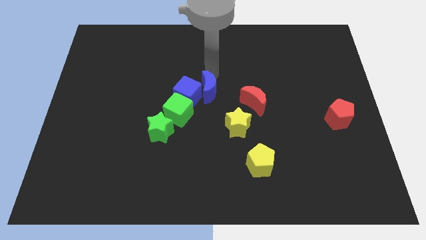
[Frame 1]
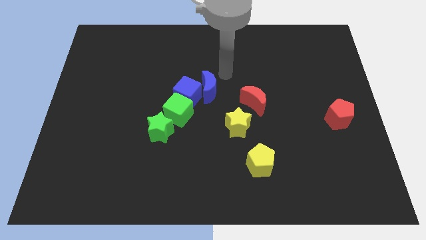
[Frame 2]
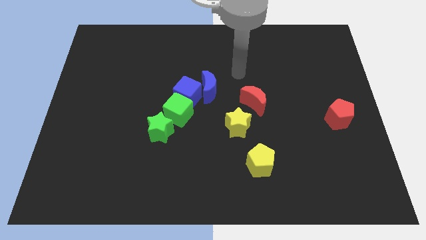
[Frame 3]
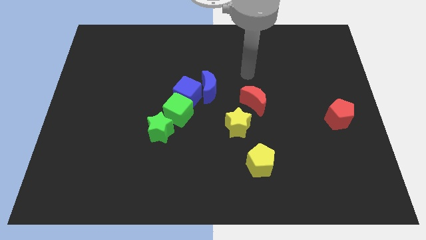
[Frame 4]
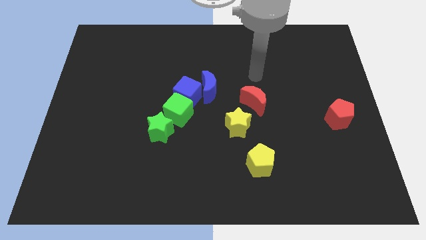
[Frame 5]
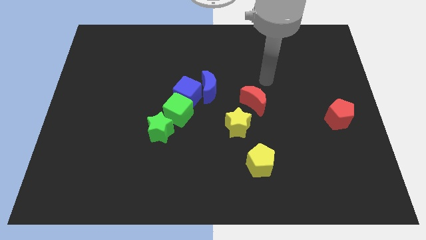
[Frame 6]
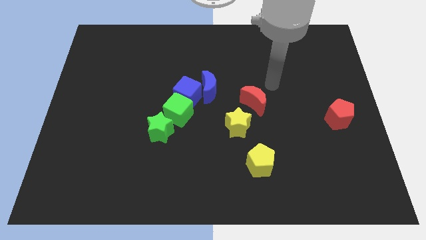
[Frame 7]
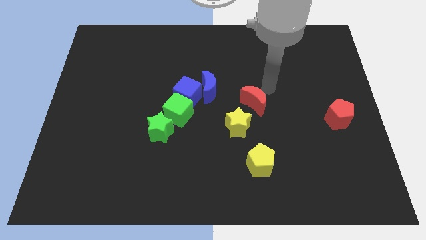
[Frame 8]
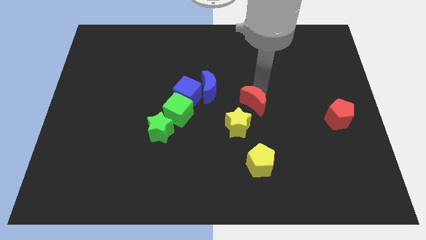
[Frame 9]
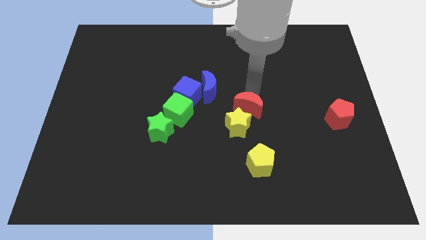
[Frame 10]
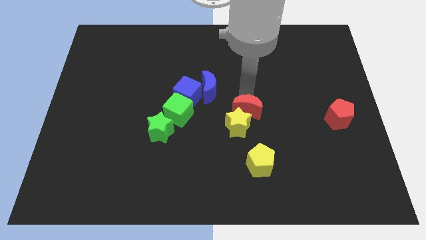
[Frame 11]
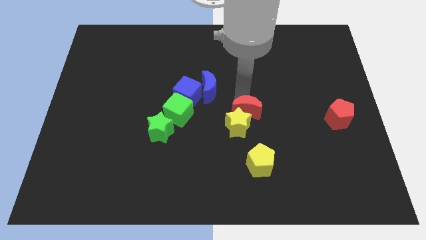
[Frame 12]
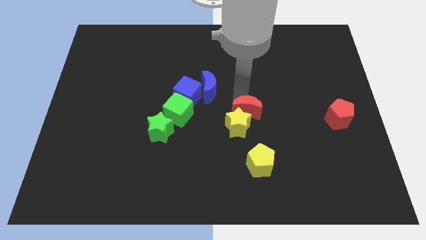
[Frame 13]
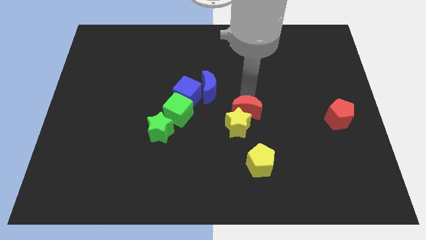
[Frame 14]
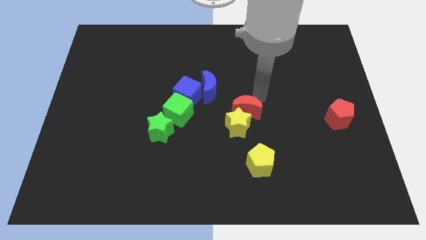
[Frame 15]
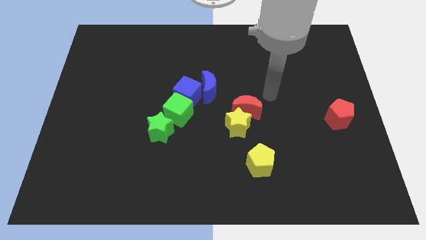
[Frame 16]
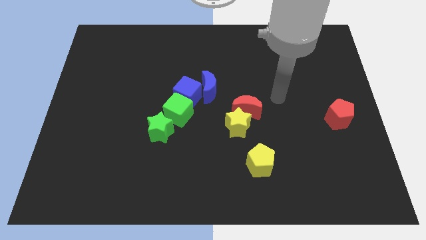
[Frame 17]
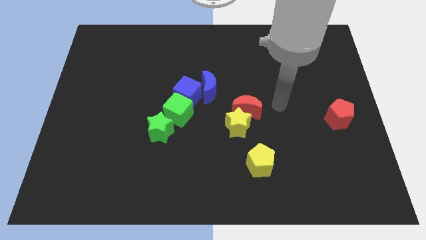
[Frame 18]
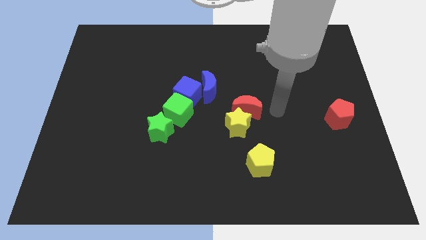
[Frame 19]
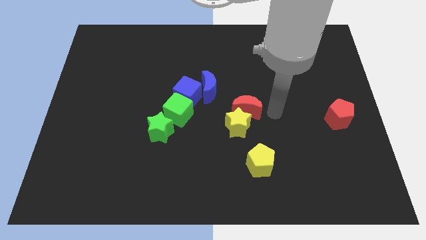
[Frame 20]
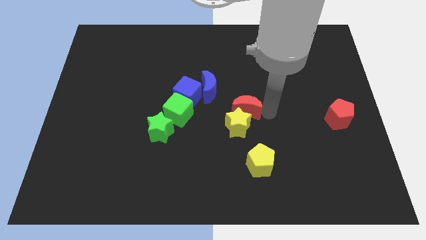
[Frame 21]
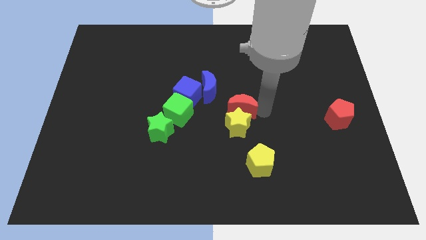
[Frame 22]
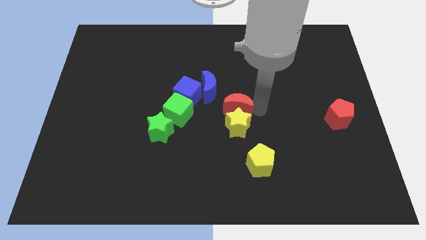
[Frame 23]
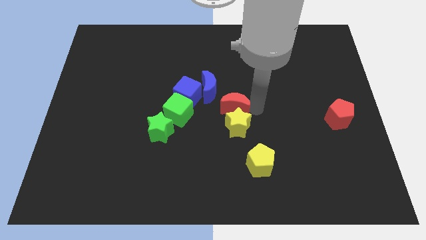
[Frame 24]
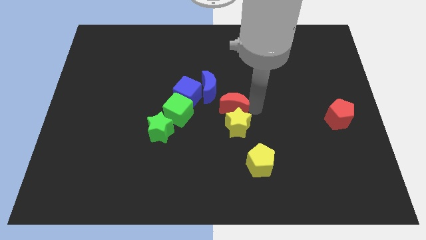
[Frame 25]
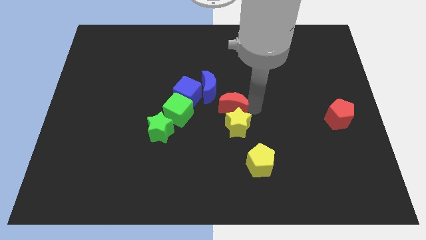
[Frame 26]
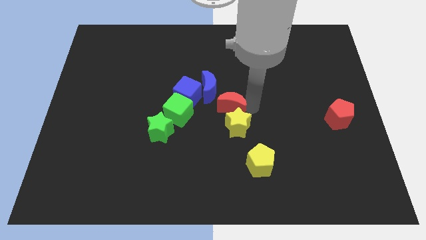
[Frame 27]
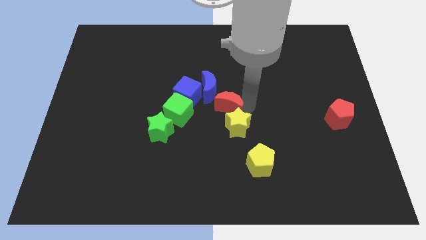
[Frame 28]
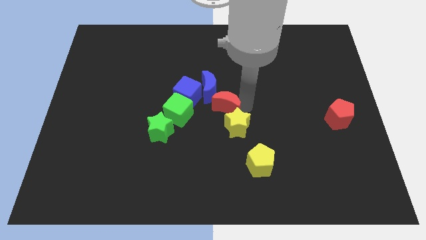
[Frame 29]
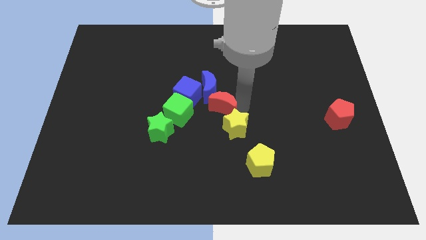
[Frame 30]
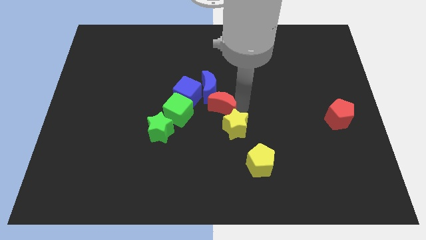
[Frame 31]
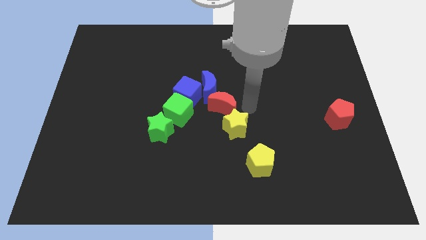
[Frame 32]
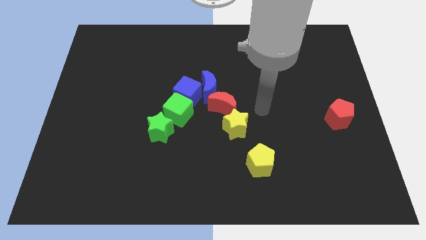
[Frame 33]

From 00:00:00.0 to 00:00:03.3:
push red crescent slightly towards blue crescent

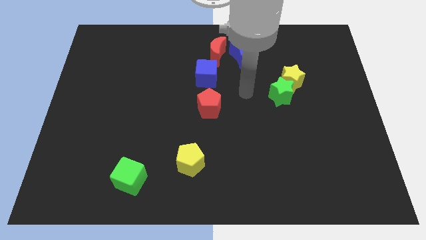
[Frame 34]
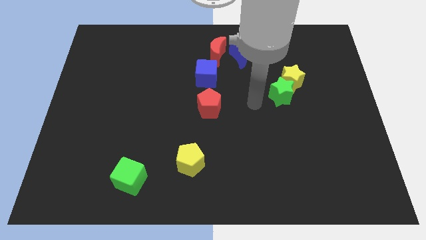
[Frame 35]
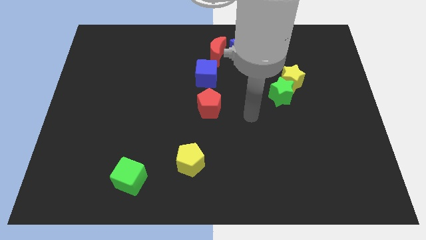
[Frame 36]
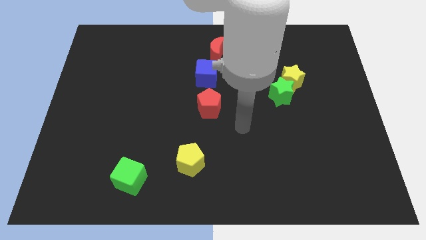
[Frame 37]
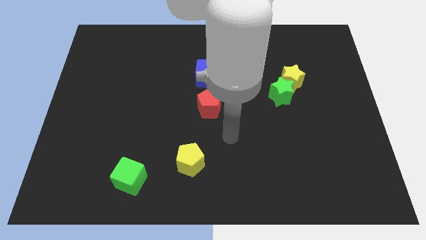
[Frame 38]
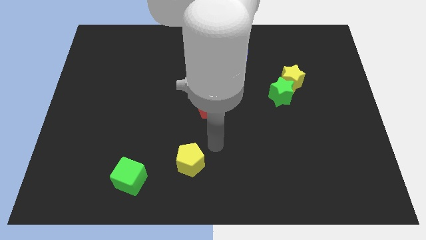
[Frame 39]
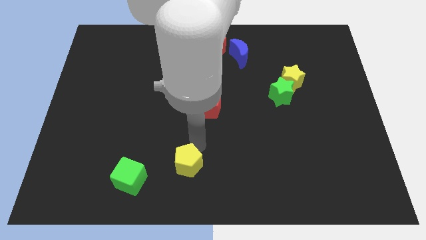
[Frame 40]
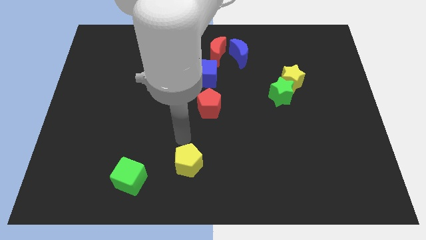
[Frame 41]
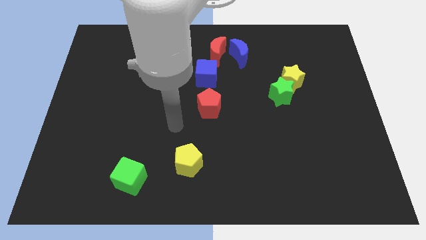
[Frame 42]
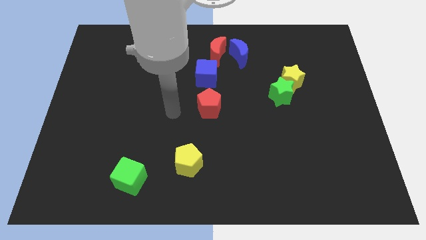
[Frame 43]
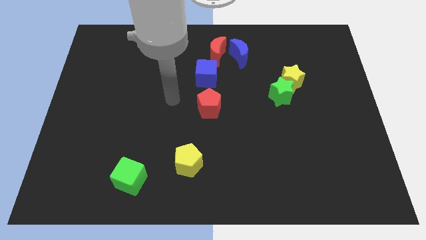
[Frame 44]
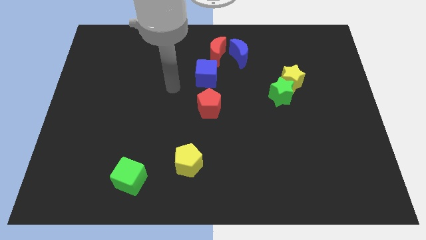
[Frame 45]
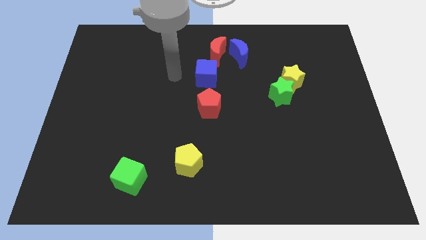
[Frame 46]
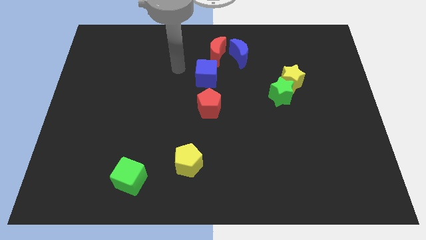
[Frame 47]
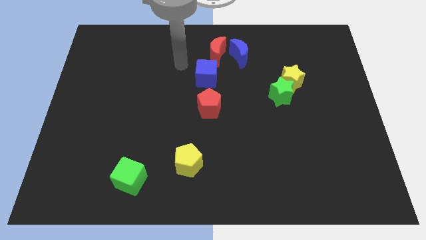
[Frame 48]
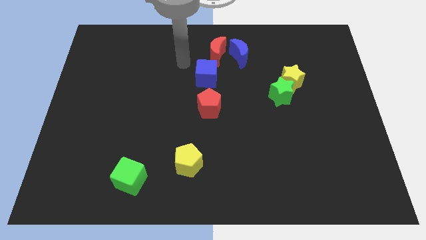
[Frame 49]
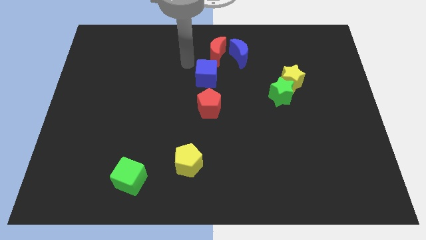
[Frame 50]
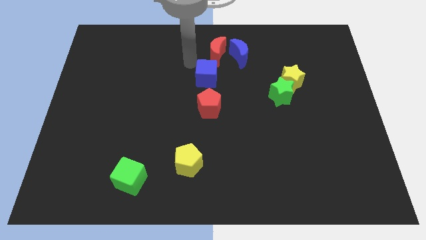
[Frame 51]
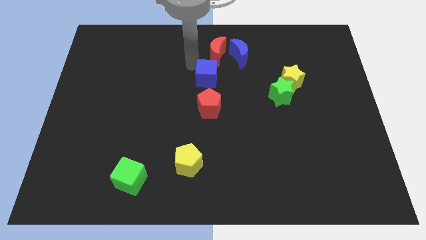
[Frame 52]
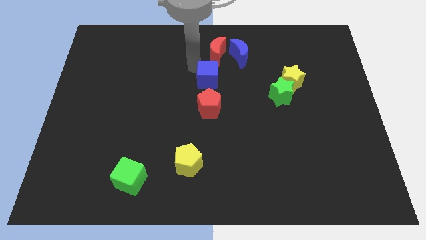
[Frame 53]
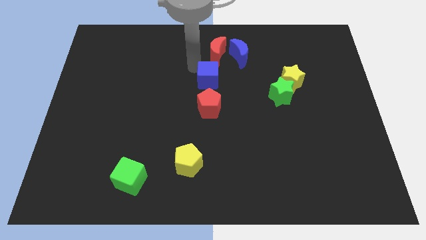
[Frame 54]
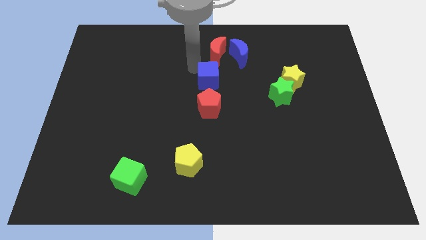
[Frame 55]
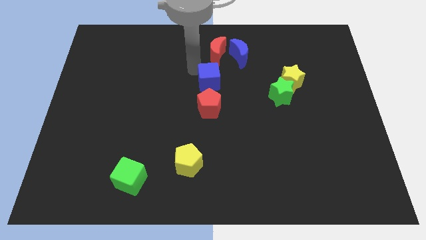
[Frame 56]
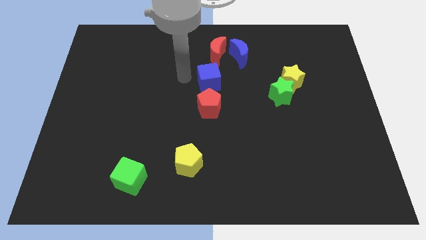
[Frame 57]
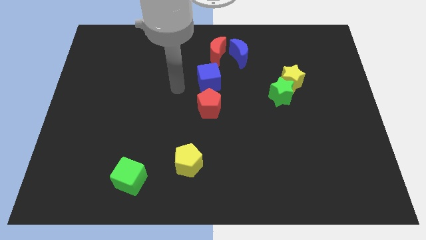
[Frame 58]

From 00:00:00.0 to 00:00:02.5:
move the blue cube slightly to the down

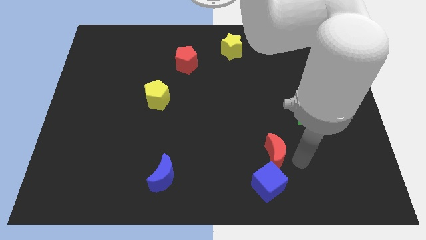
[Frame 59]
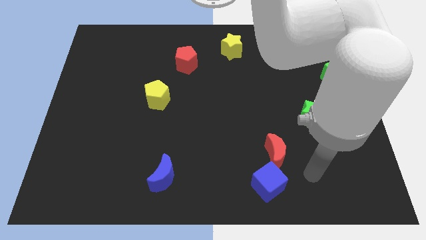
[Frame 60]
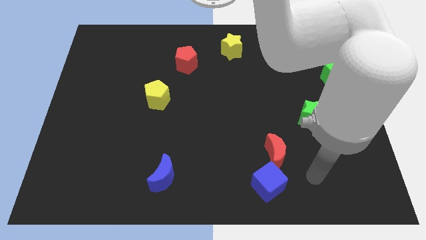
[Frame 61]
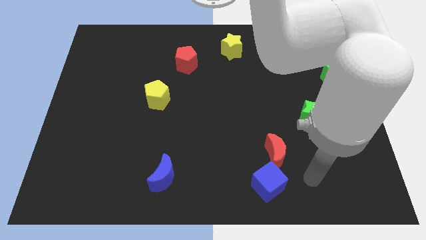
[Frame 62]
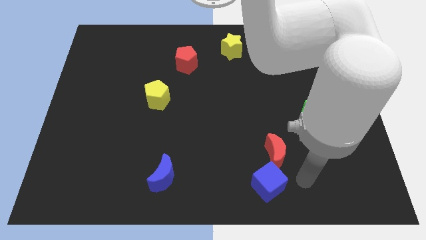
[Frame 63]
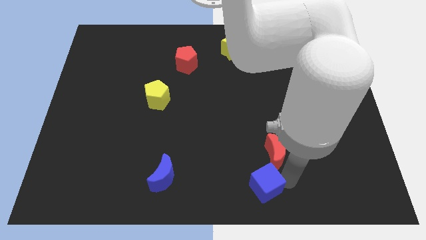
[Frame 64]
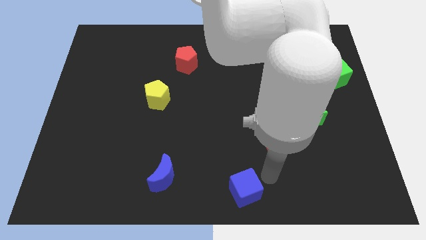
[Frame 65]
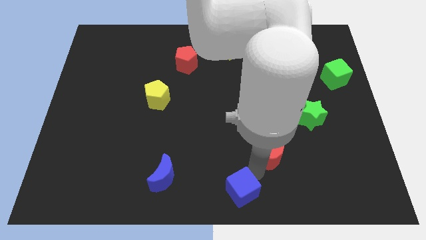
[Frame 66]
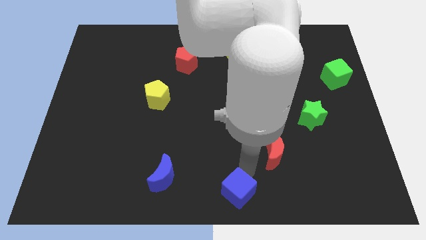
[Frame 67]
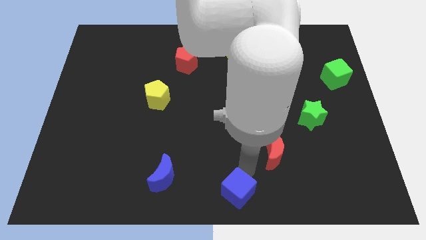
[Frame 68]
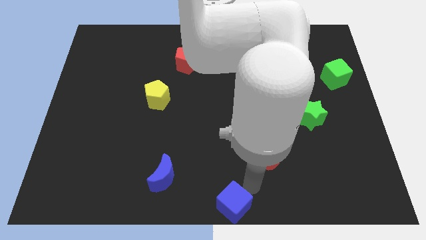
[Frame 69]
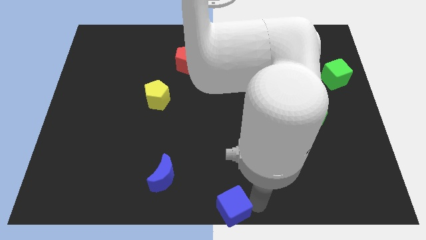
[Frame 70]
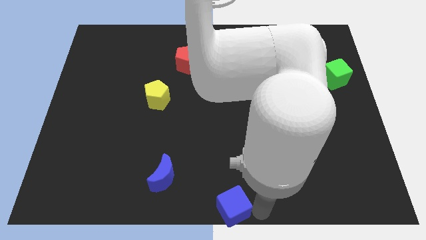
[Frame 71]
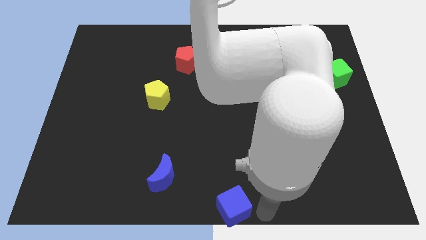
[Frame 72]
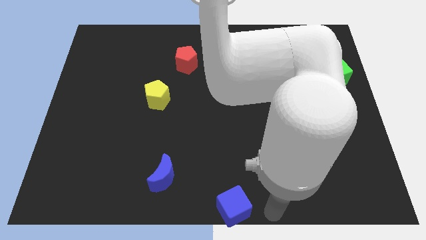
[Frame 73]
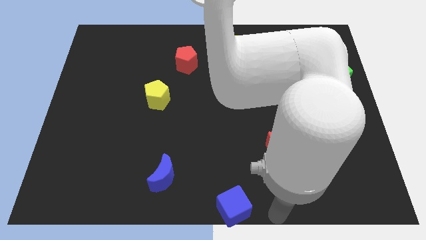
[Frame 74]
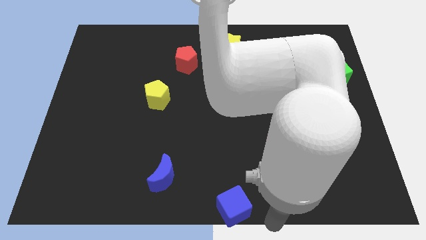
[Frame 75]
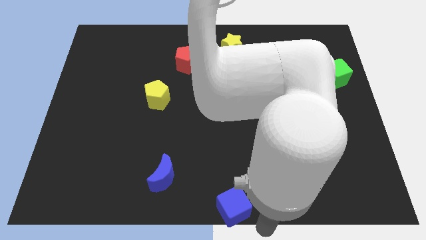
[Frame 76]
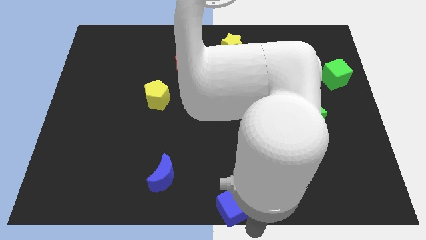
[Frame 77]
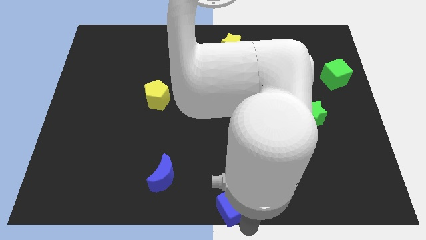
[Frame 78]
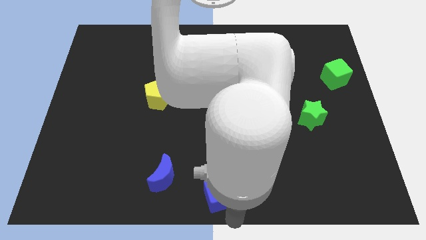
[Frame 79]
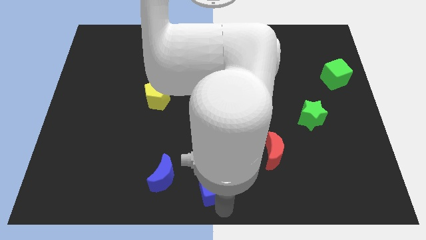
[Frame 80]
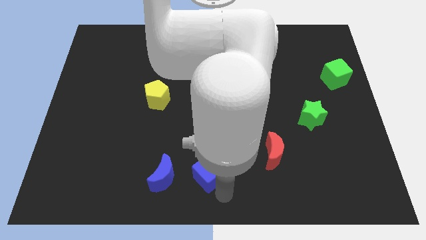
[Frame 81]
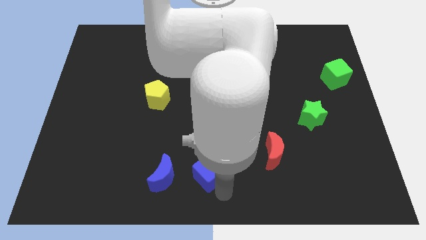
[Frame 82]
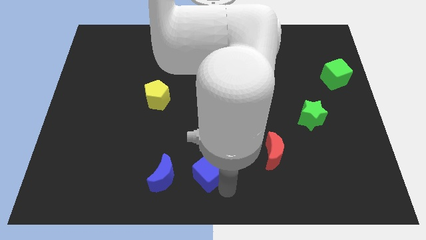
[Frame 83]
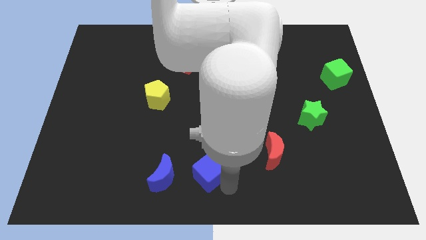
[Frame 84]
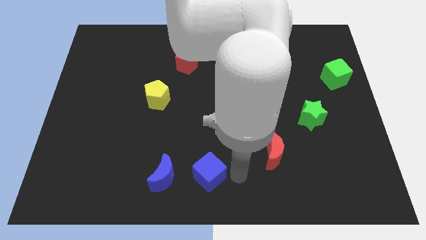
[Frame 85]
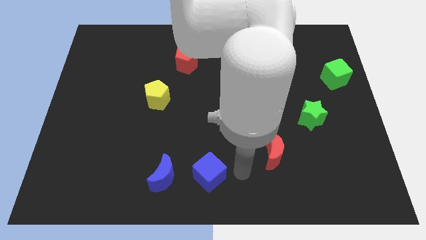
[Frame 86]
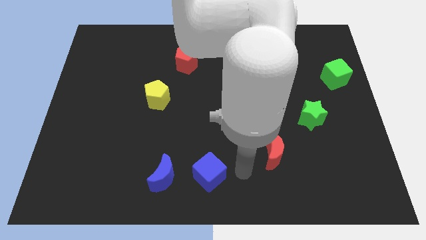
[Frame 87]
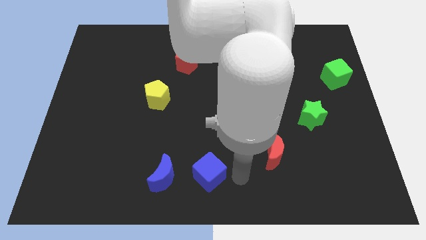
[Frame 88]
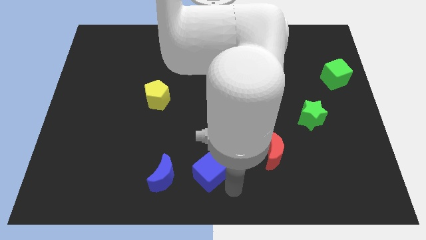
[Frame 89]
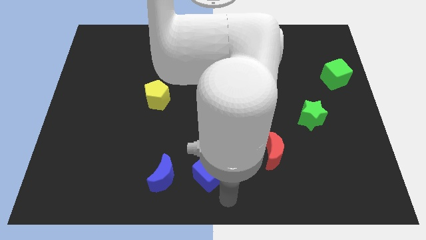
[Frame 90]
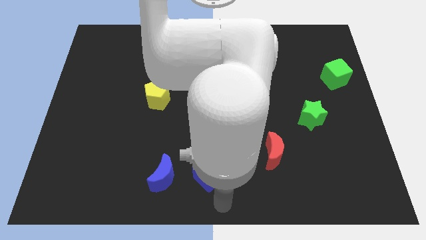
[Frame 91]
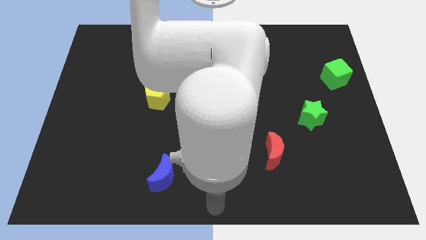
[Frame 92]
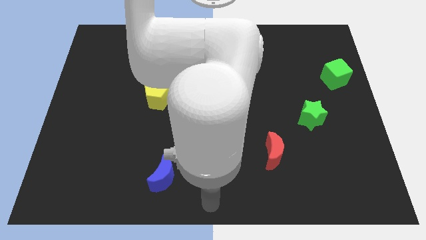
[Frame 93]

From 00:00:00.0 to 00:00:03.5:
move the blue cube to the right of the blue crescent
